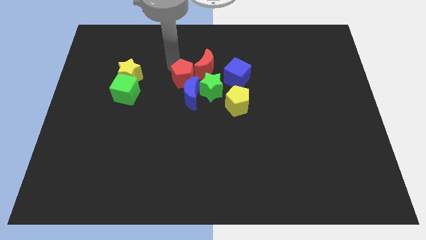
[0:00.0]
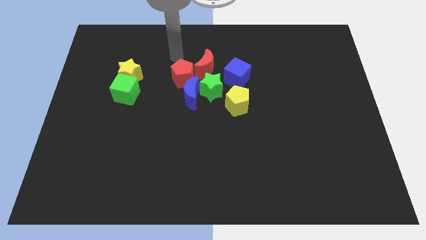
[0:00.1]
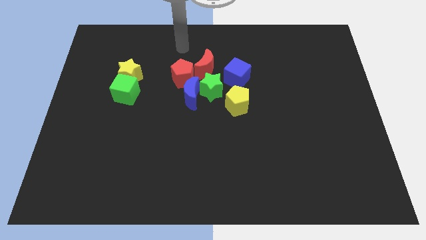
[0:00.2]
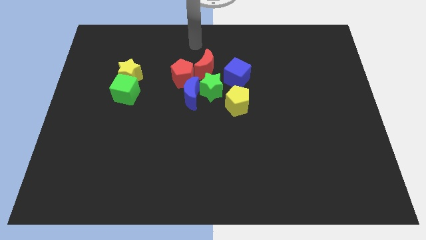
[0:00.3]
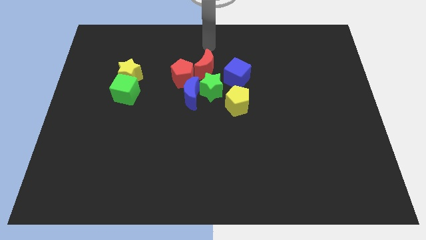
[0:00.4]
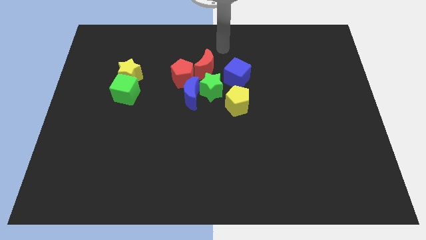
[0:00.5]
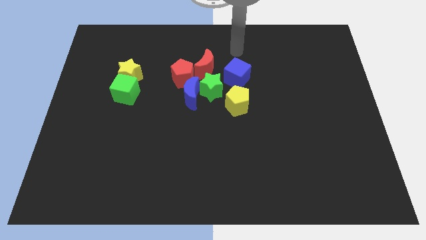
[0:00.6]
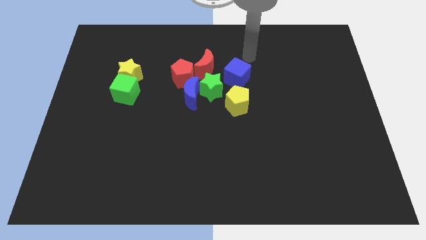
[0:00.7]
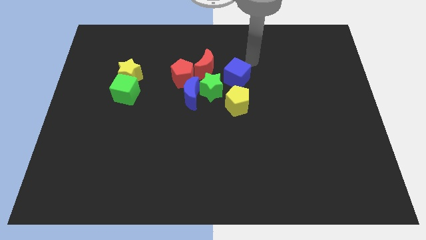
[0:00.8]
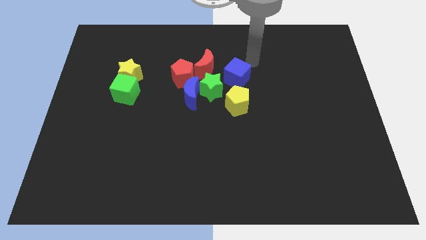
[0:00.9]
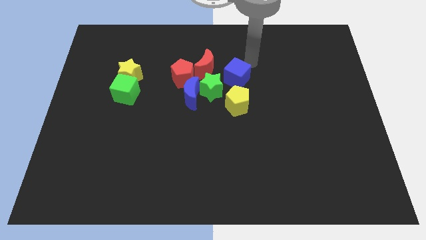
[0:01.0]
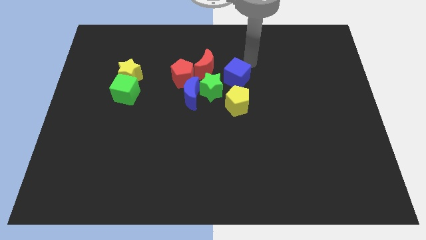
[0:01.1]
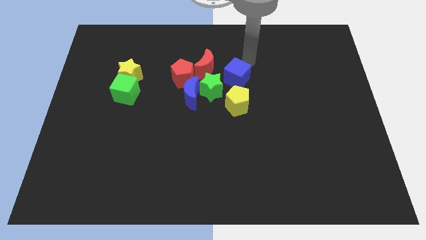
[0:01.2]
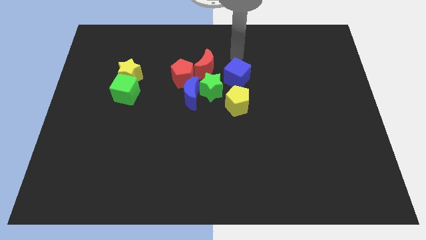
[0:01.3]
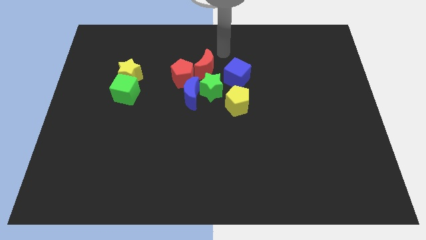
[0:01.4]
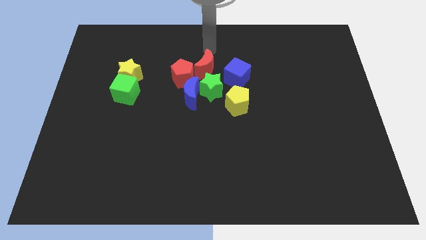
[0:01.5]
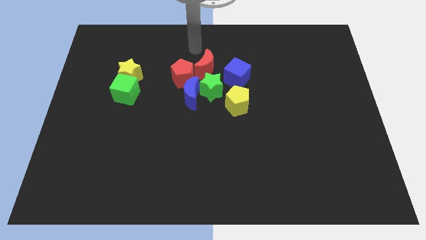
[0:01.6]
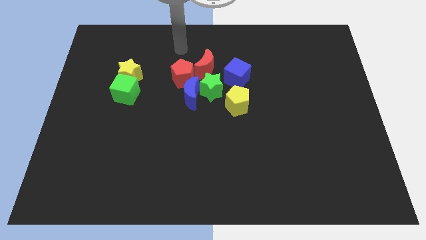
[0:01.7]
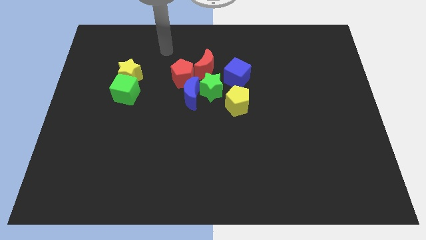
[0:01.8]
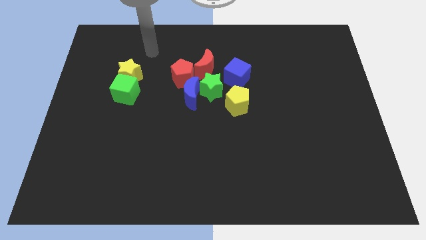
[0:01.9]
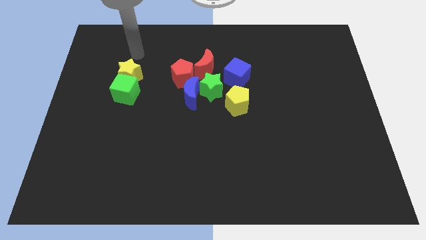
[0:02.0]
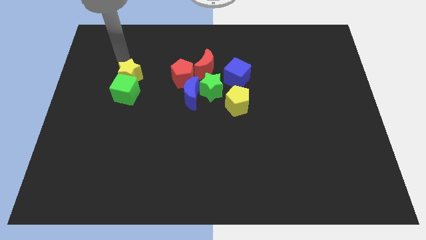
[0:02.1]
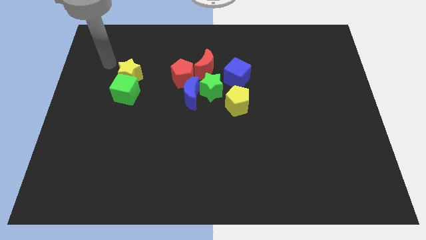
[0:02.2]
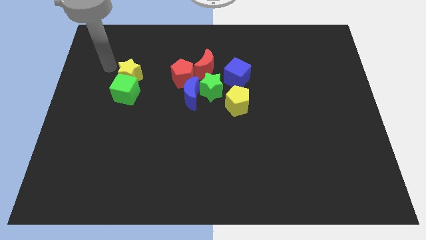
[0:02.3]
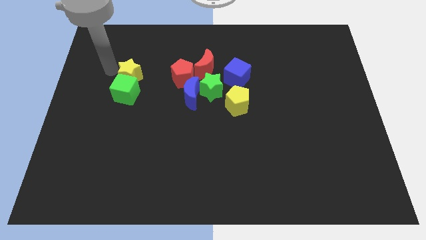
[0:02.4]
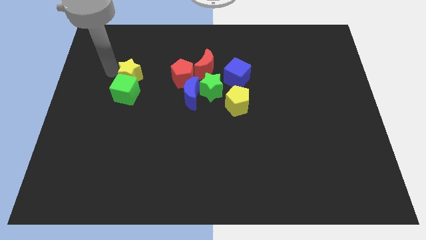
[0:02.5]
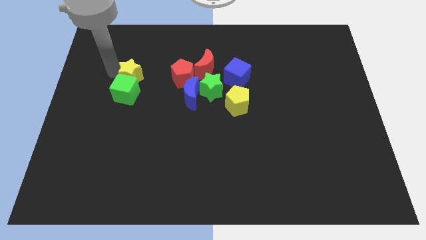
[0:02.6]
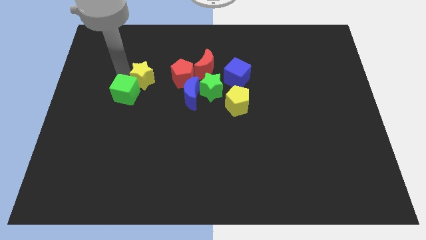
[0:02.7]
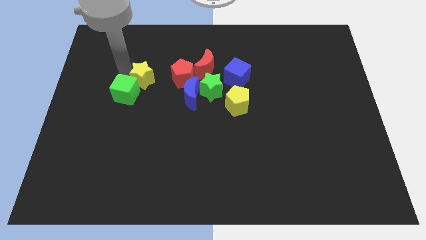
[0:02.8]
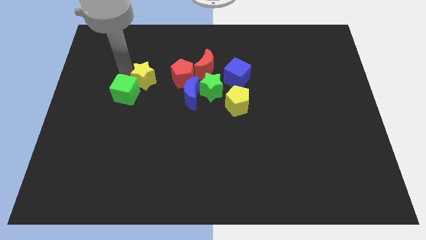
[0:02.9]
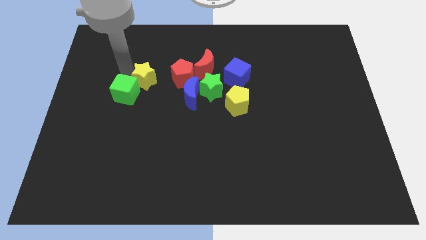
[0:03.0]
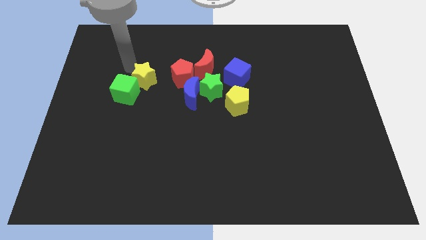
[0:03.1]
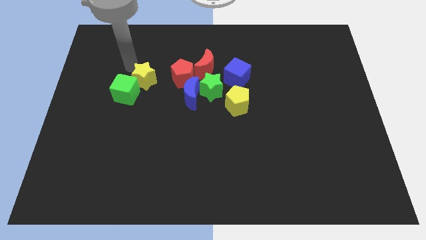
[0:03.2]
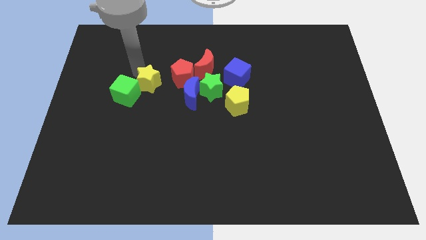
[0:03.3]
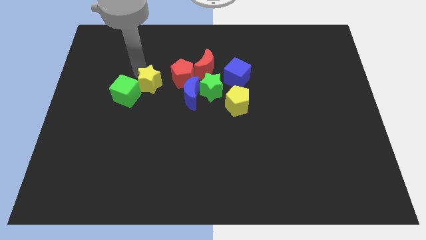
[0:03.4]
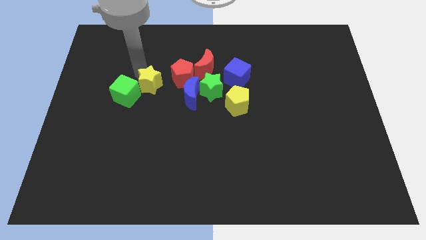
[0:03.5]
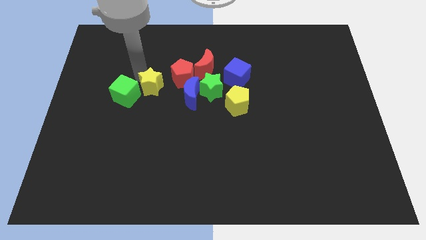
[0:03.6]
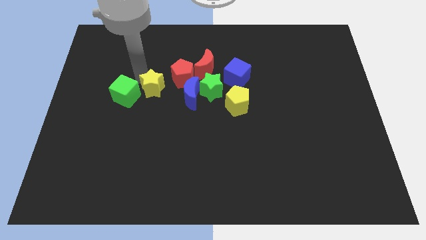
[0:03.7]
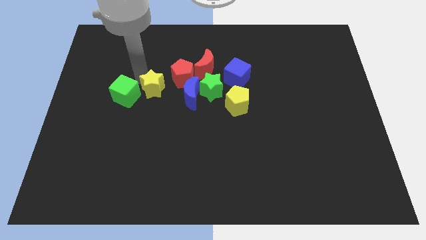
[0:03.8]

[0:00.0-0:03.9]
move away from the red pentagon

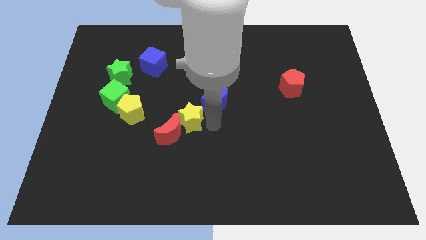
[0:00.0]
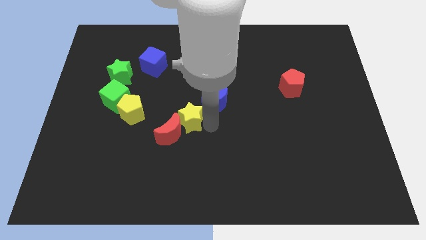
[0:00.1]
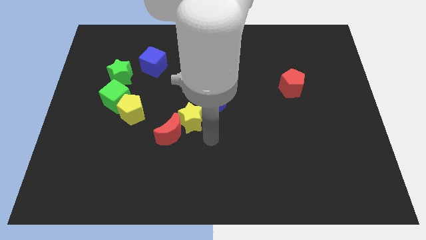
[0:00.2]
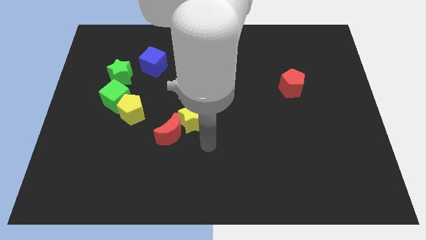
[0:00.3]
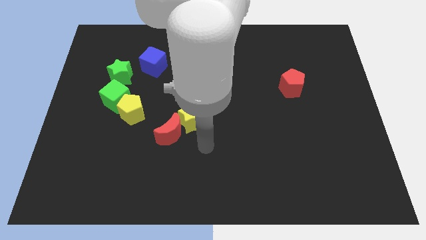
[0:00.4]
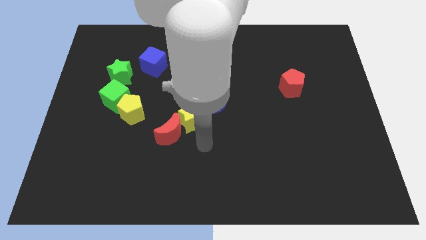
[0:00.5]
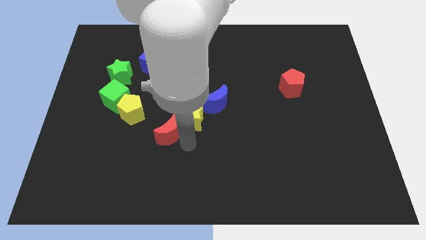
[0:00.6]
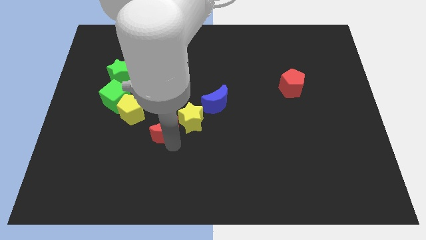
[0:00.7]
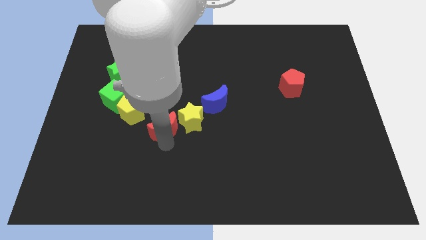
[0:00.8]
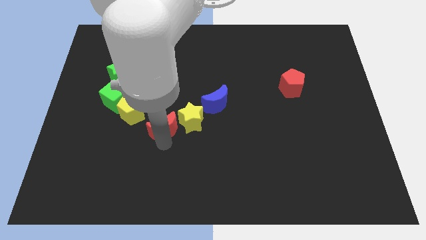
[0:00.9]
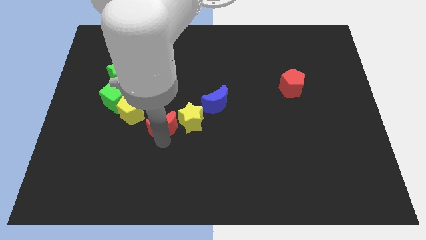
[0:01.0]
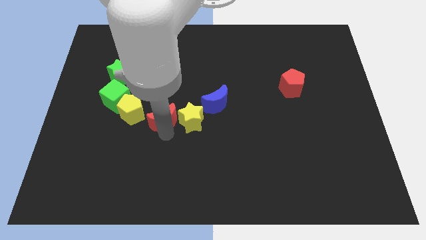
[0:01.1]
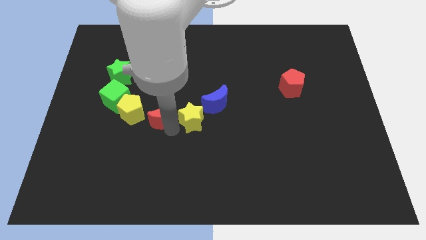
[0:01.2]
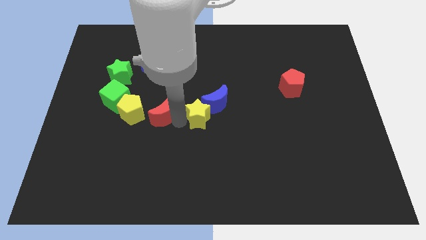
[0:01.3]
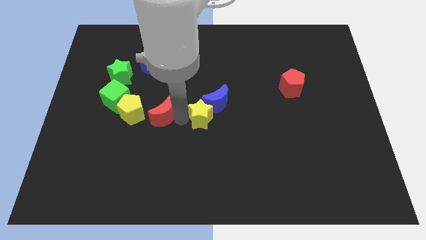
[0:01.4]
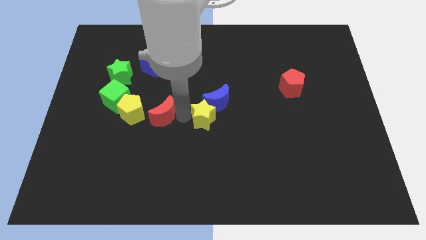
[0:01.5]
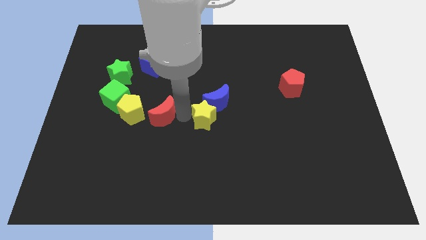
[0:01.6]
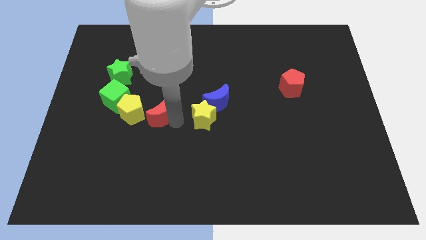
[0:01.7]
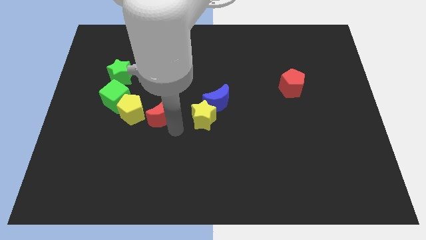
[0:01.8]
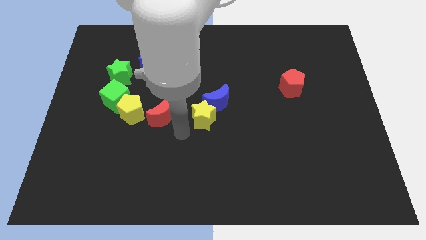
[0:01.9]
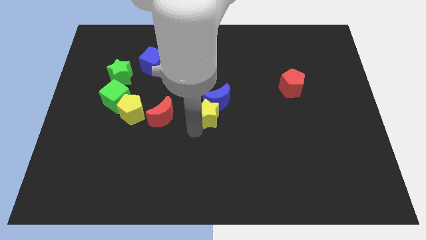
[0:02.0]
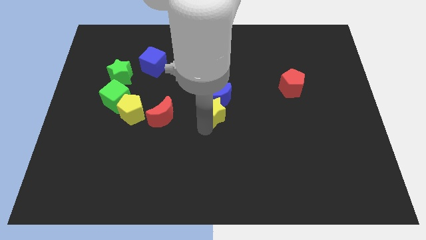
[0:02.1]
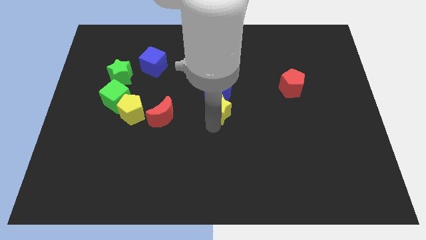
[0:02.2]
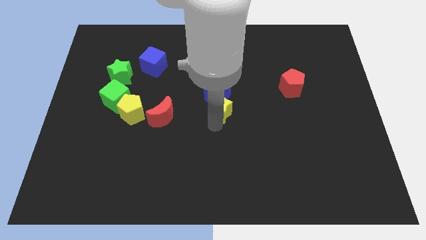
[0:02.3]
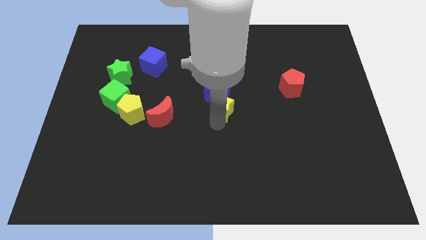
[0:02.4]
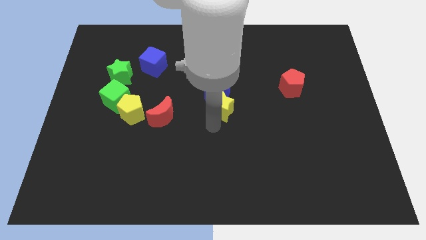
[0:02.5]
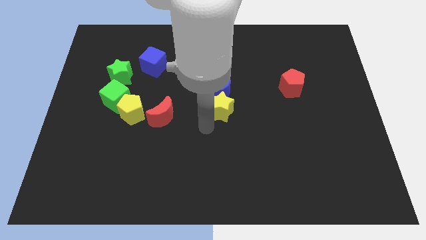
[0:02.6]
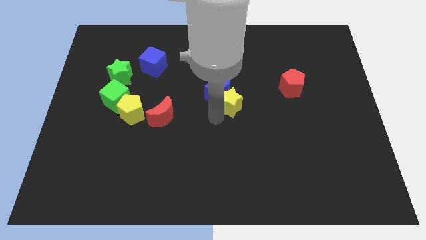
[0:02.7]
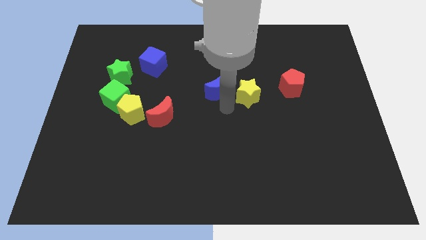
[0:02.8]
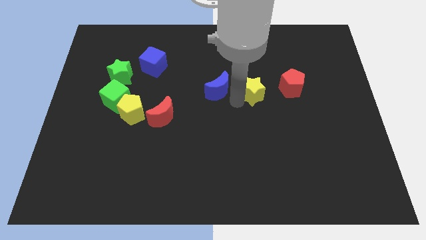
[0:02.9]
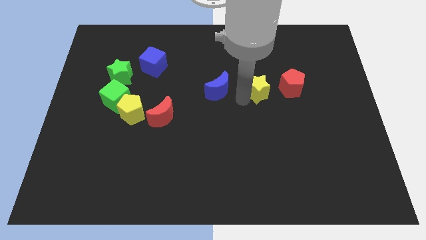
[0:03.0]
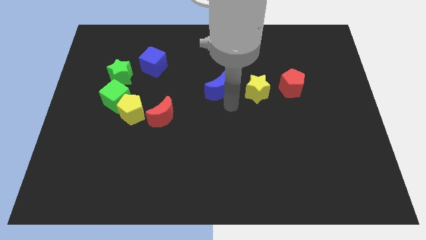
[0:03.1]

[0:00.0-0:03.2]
separate the yellow star from the red crescent

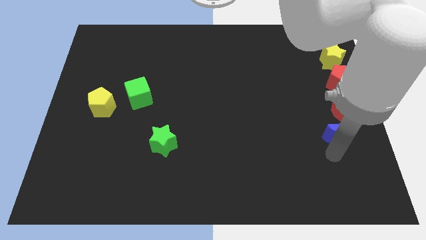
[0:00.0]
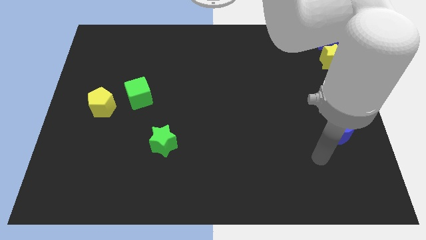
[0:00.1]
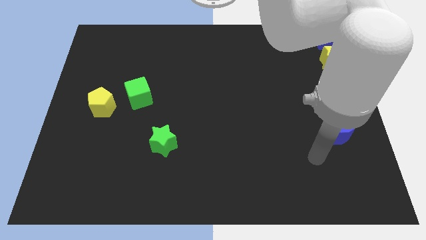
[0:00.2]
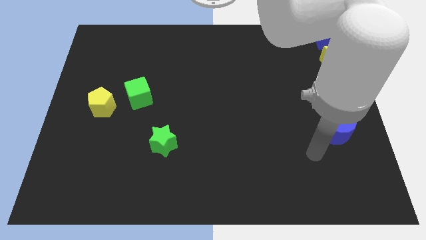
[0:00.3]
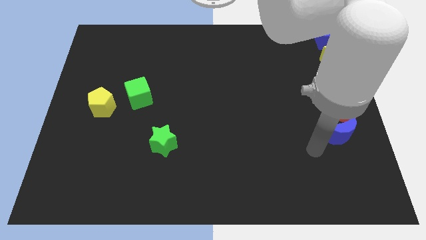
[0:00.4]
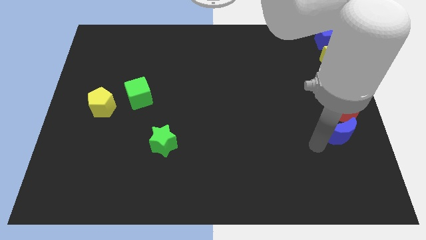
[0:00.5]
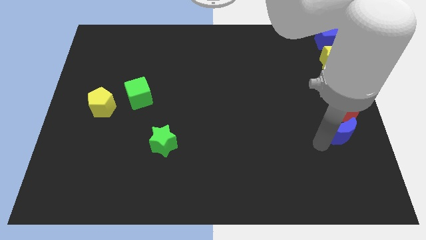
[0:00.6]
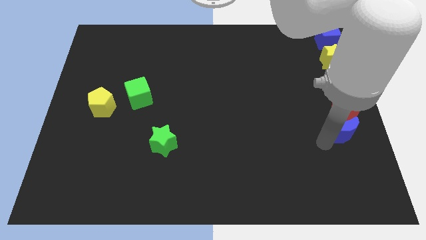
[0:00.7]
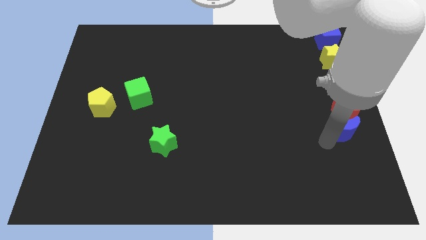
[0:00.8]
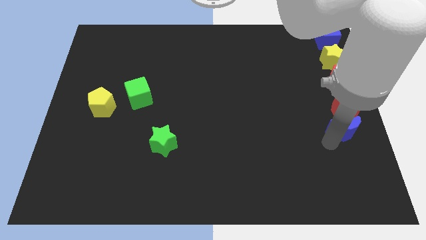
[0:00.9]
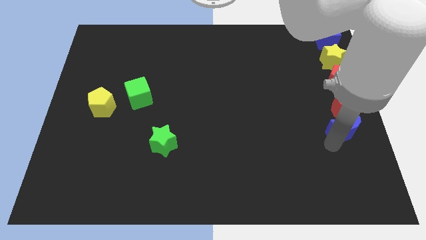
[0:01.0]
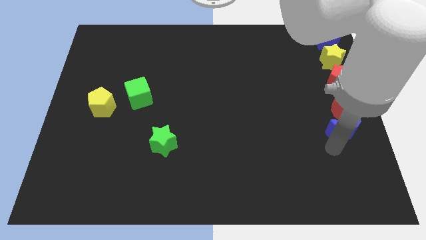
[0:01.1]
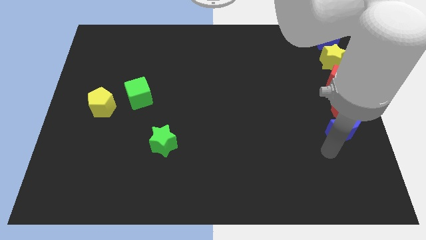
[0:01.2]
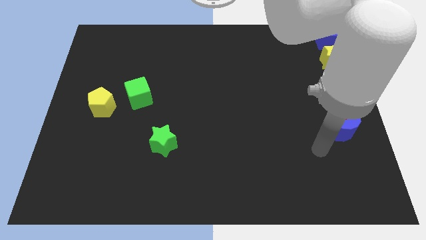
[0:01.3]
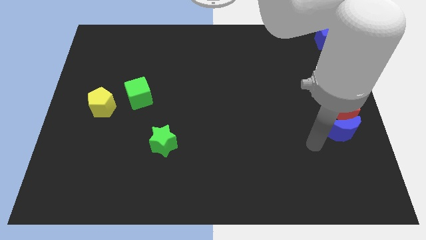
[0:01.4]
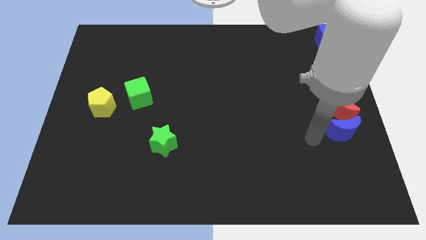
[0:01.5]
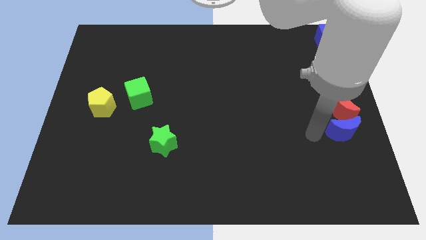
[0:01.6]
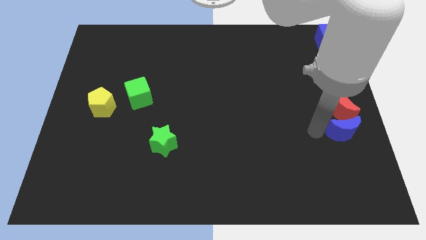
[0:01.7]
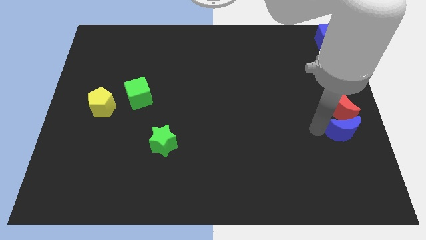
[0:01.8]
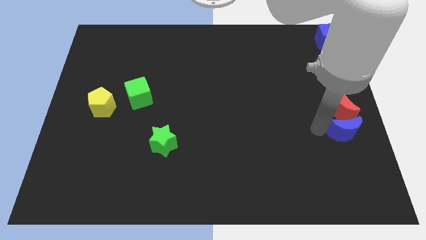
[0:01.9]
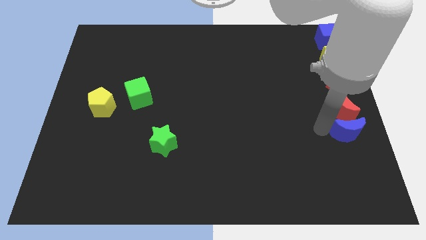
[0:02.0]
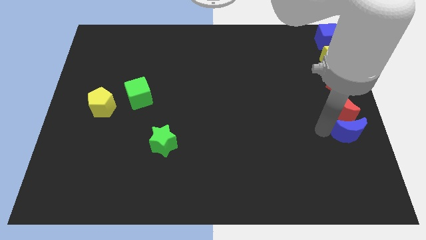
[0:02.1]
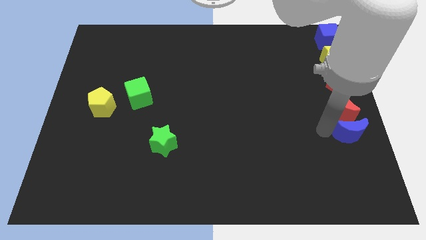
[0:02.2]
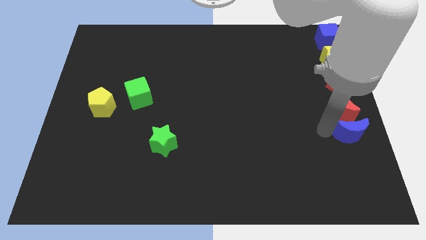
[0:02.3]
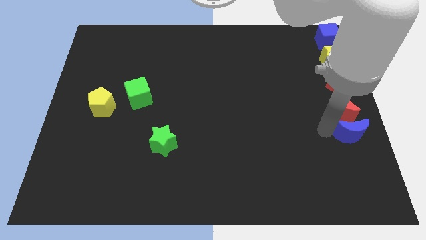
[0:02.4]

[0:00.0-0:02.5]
move the blue crescent to the bottom of red crescent
